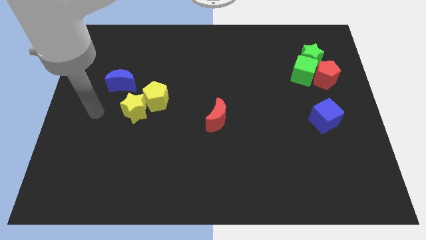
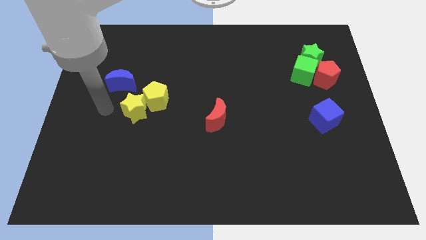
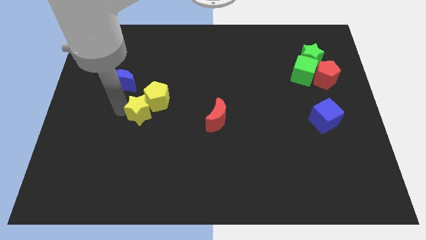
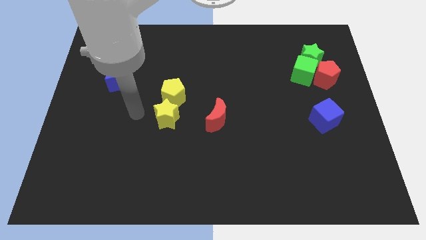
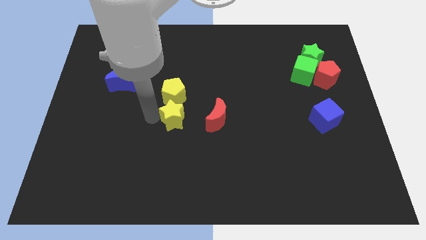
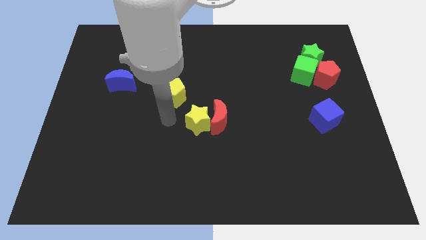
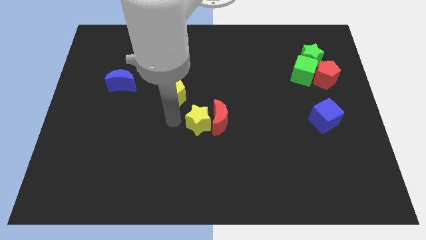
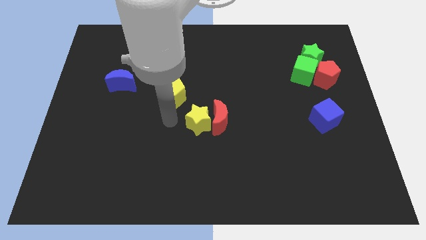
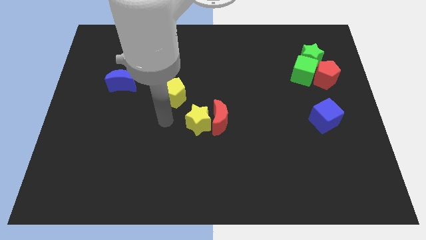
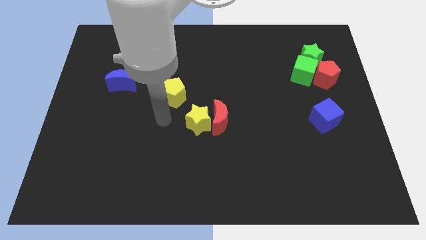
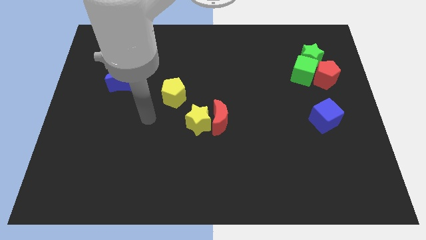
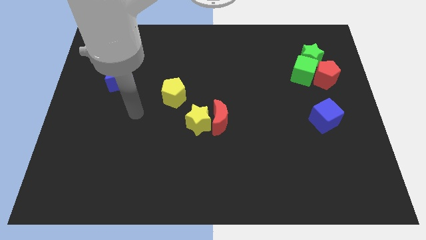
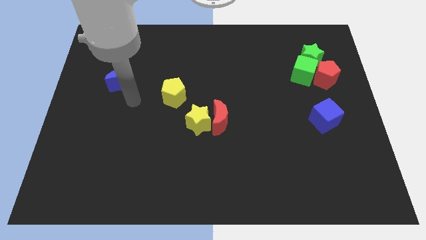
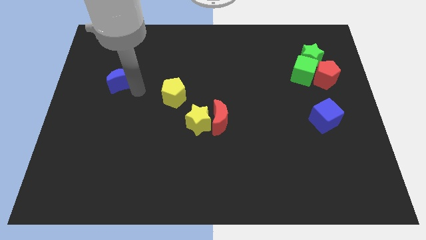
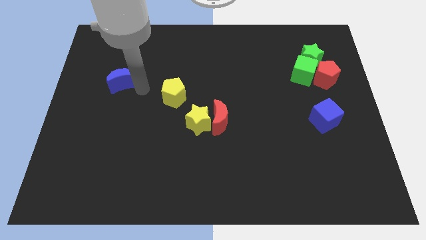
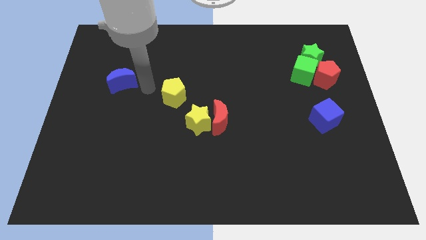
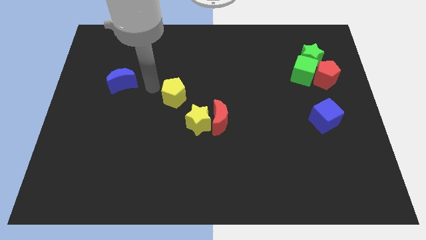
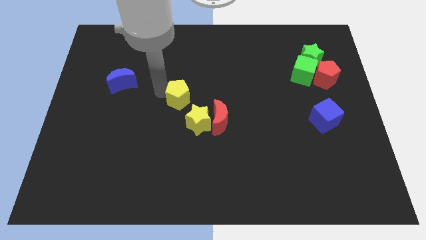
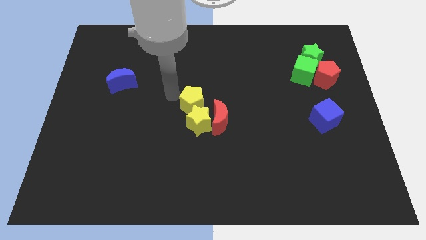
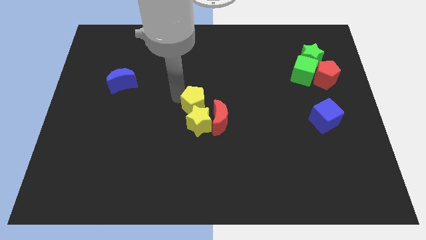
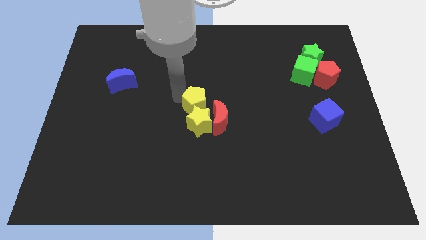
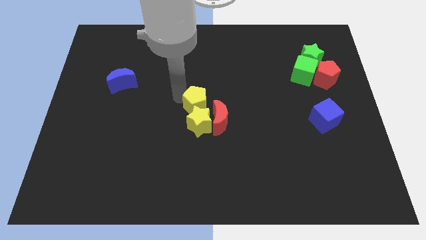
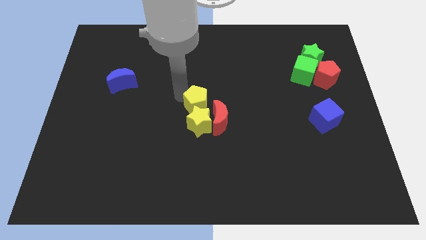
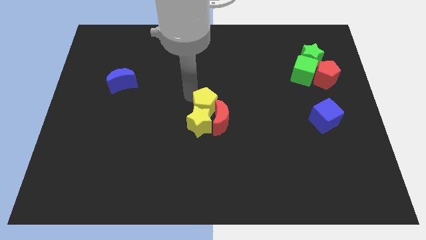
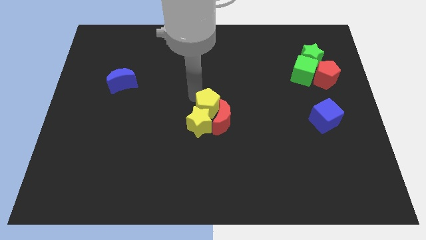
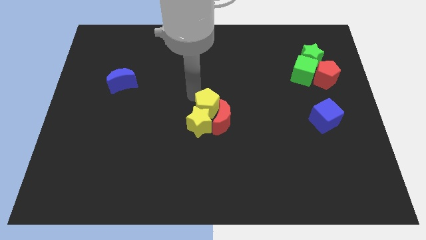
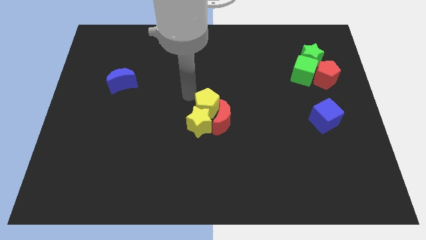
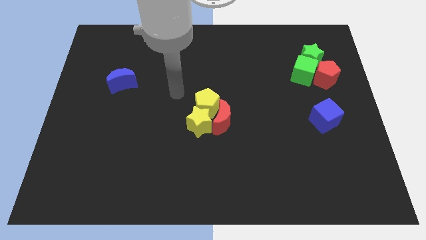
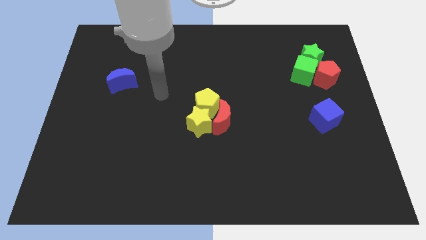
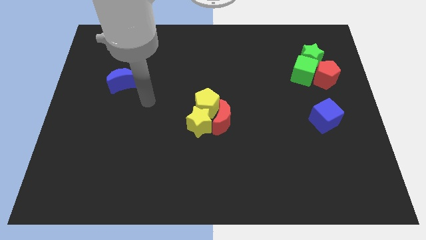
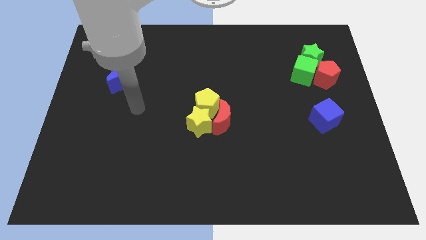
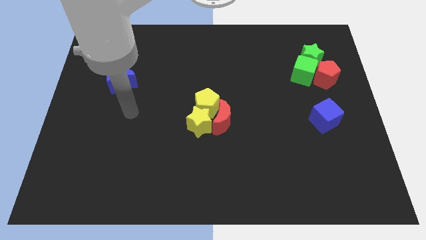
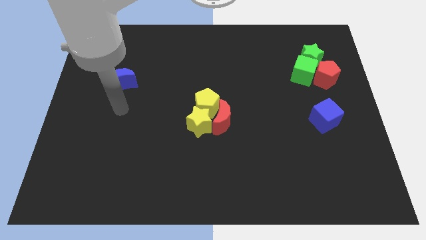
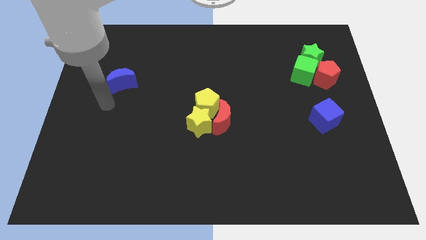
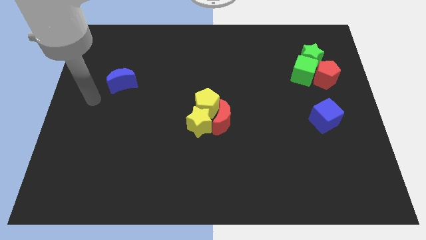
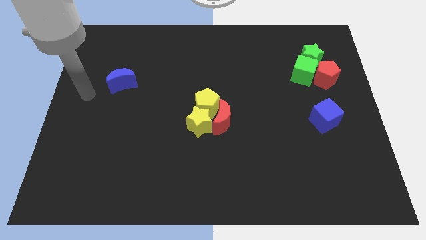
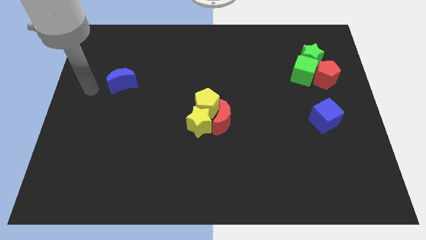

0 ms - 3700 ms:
move the yellow blocks into the red crescent at the center of the board

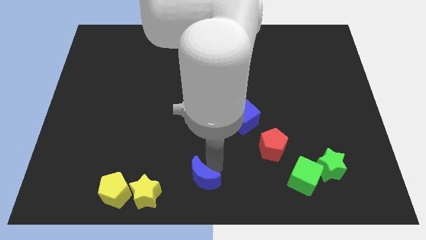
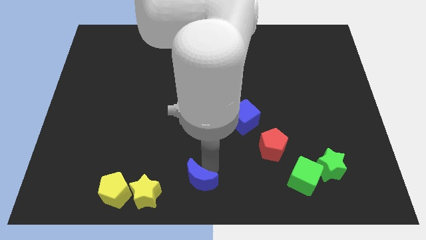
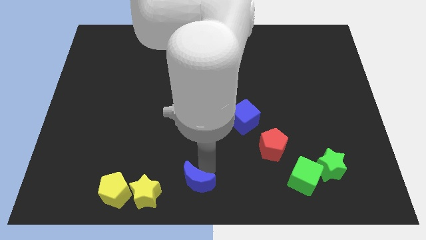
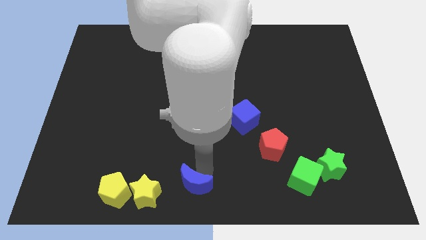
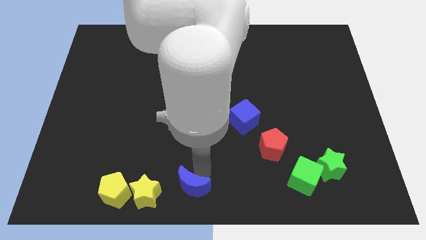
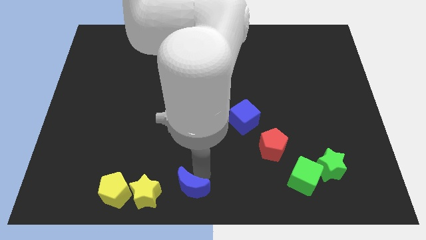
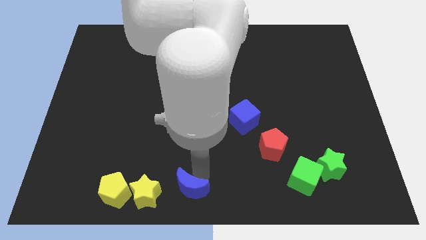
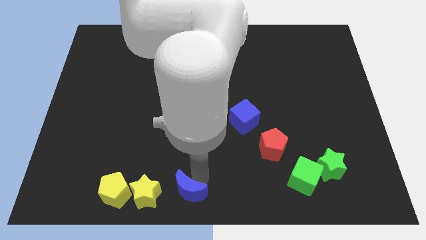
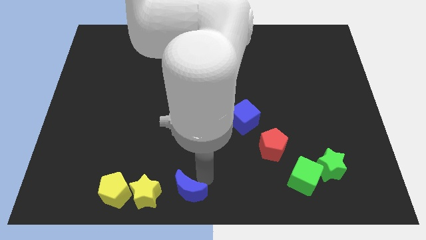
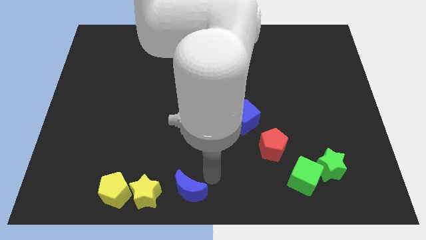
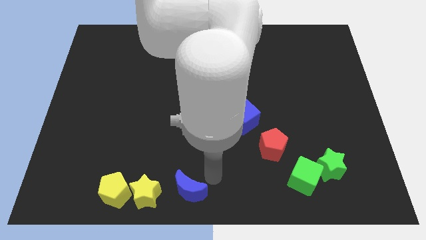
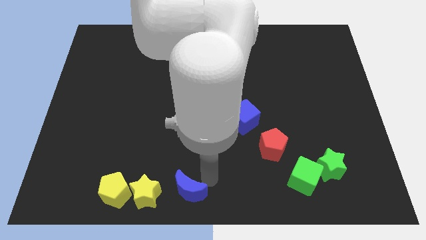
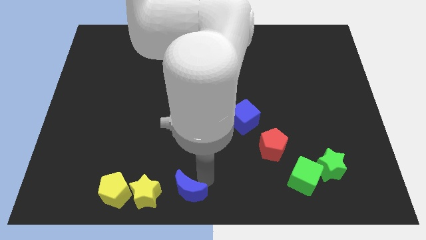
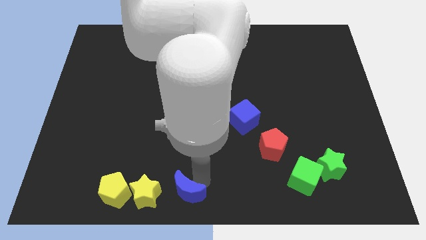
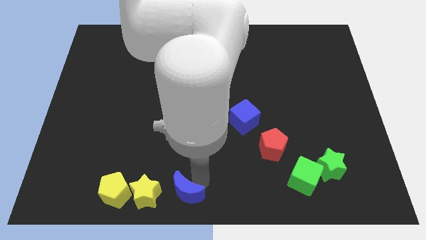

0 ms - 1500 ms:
place the blue moon right to the yellow star

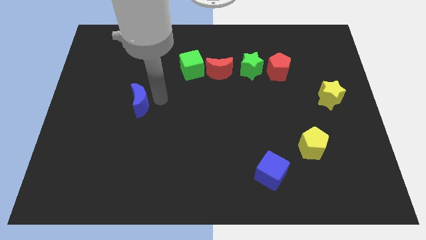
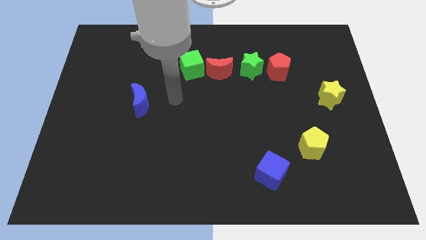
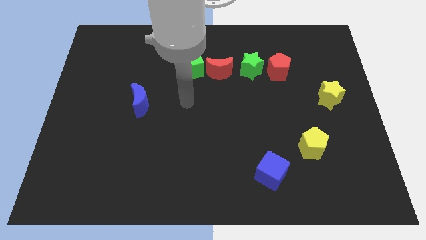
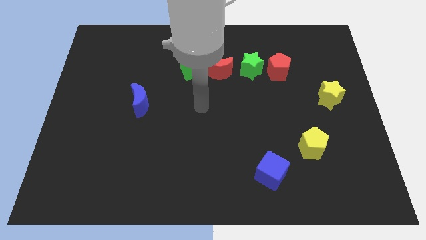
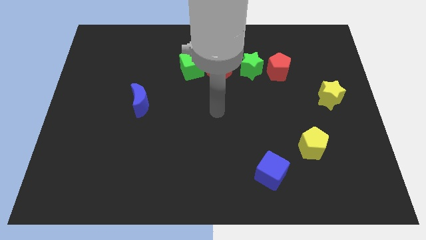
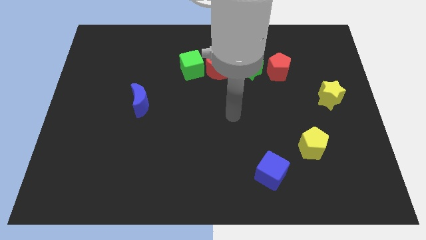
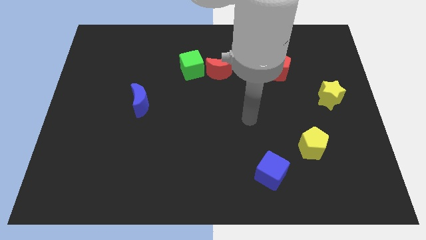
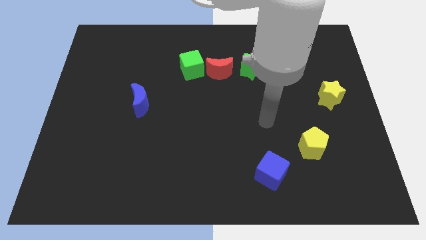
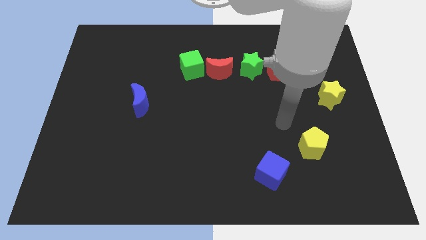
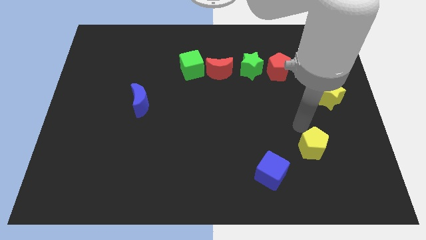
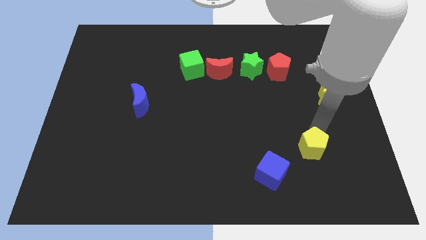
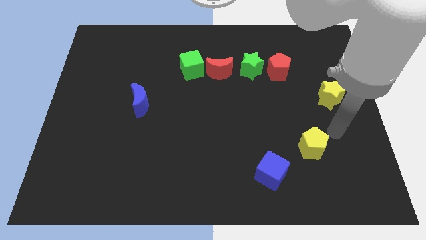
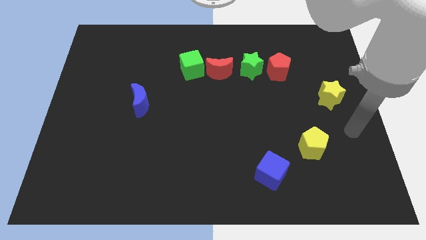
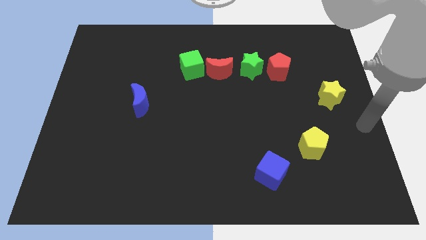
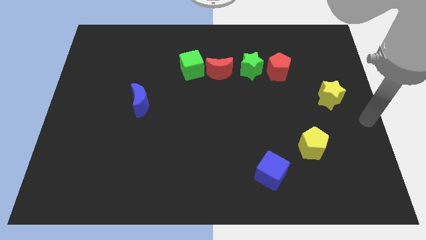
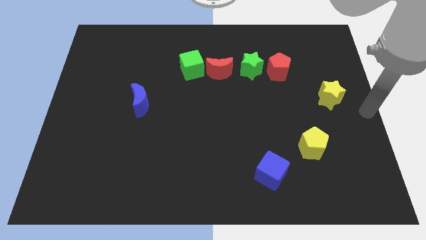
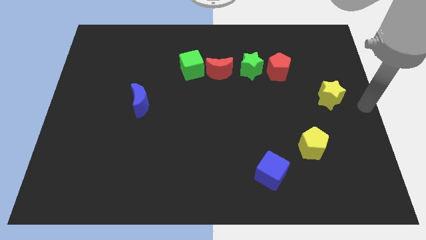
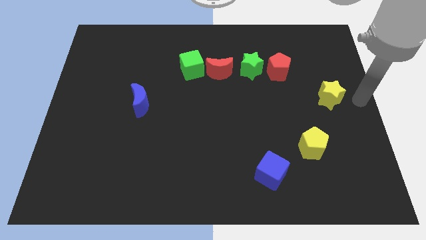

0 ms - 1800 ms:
move your arm away from the blue moon

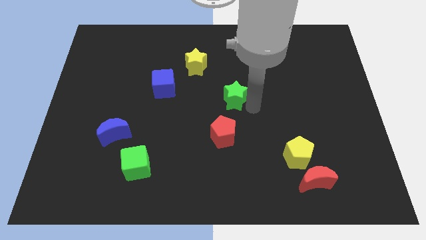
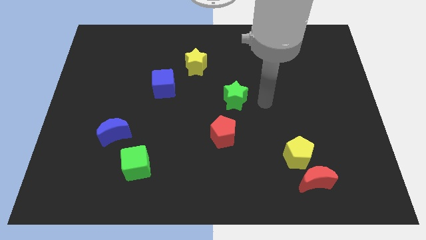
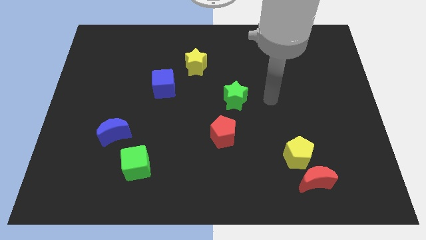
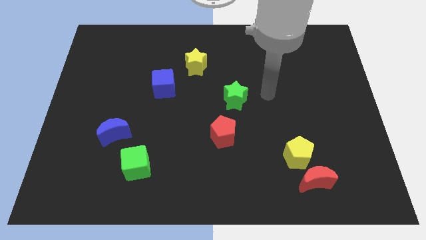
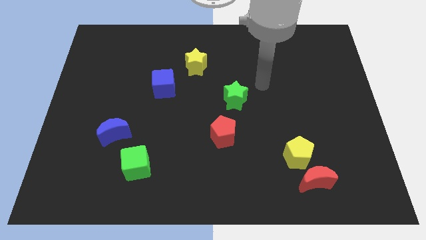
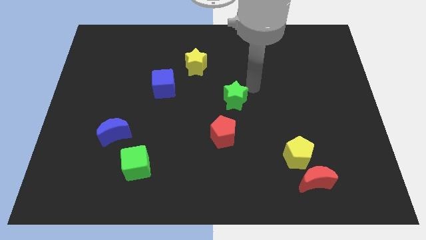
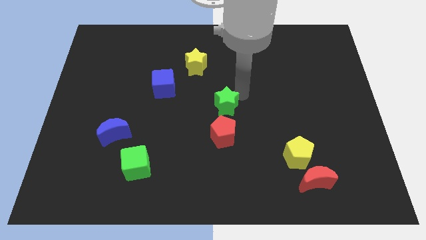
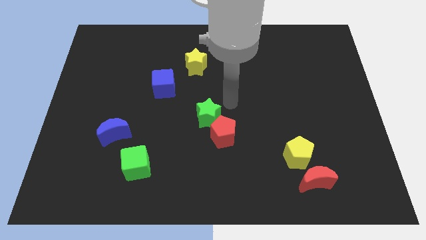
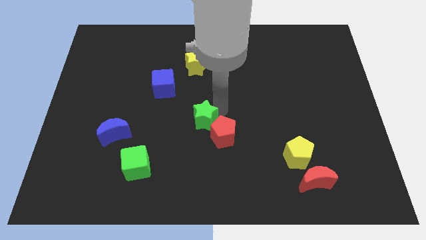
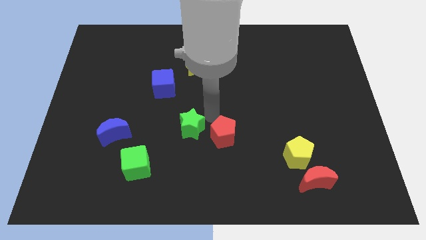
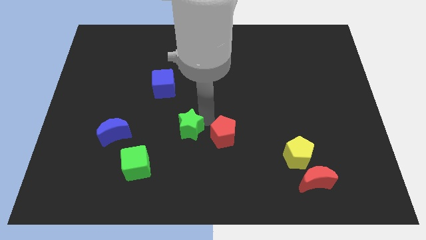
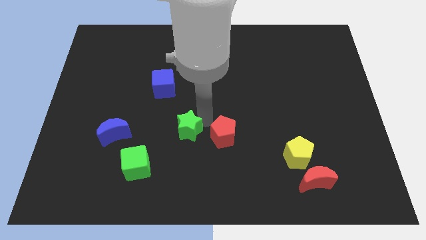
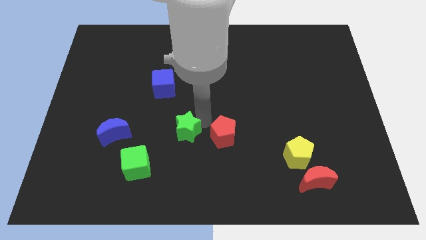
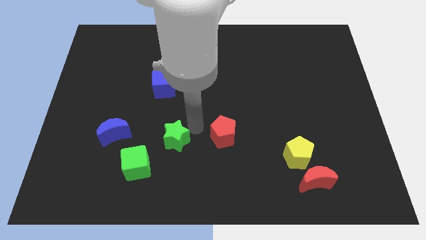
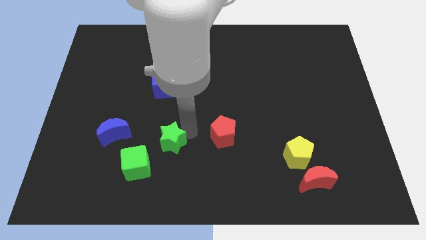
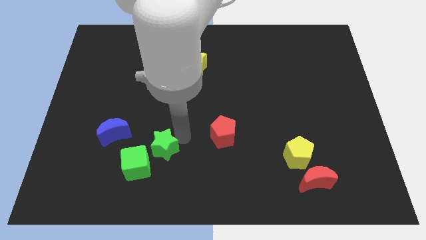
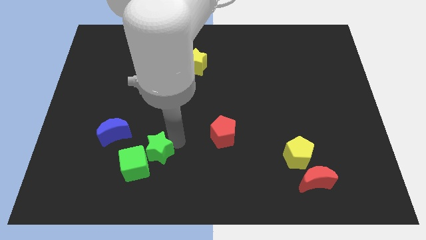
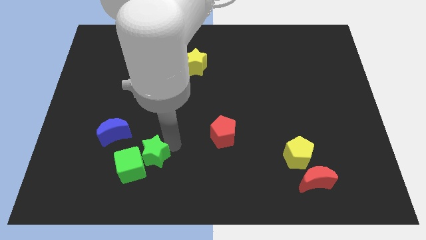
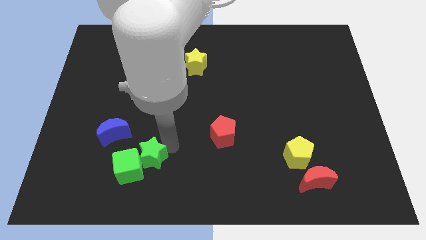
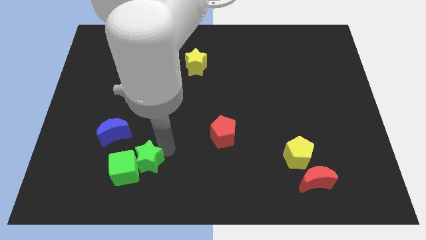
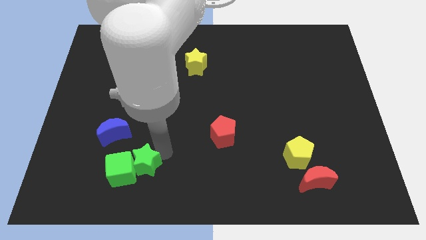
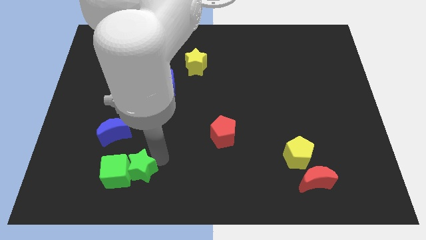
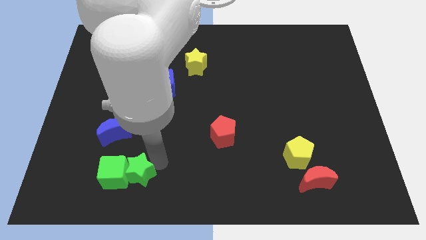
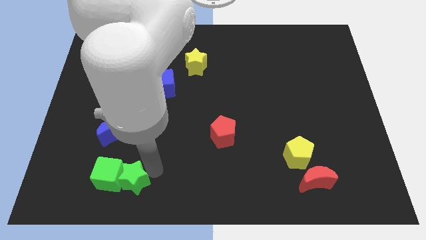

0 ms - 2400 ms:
drag green star to the right of green cube
